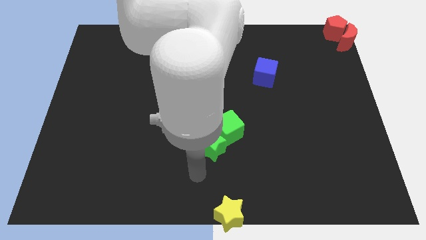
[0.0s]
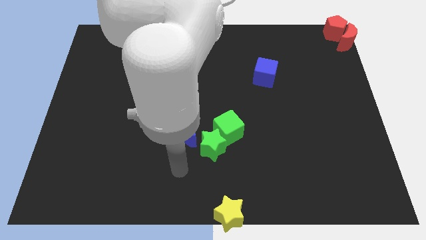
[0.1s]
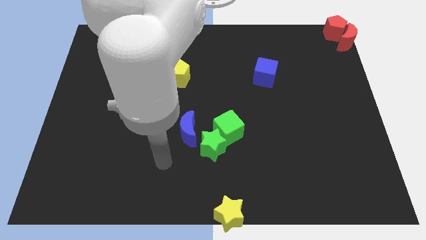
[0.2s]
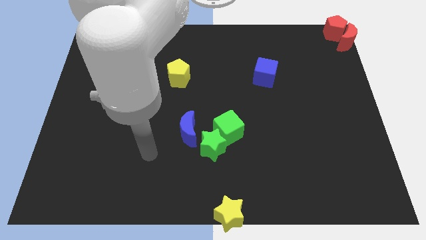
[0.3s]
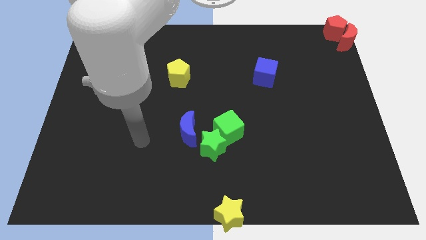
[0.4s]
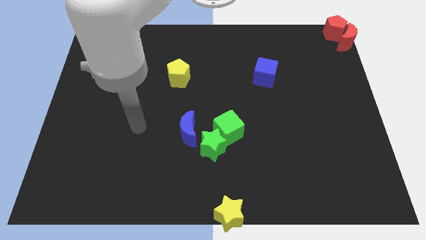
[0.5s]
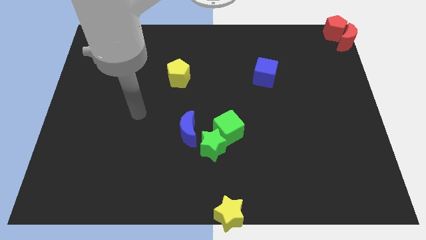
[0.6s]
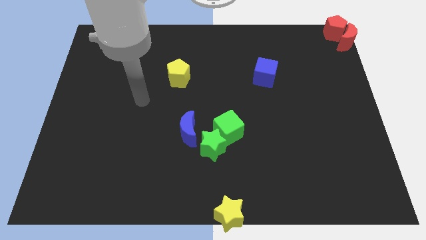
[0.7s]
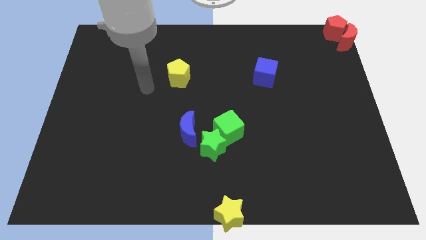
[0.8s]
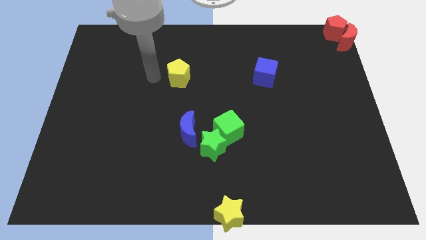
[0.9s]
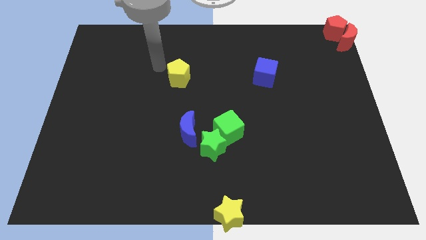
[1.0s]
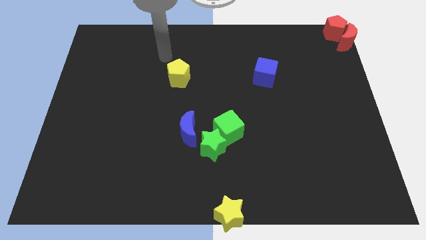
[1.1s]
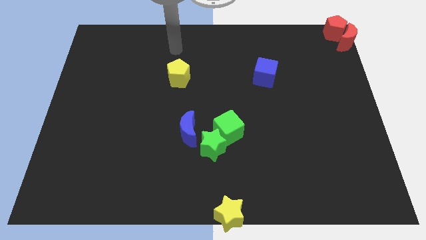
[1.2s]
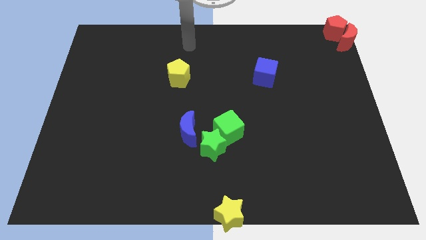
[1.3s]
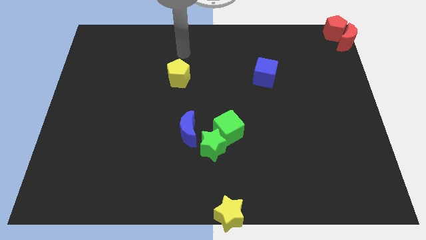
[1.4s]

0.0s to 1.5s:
point your arm at the top side of the yellow pentagon

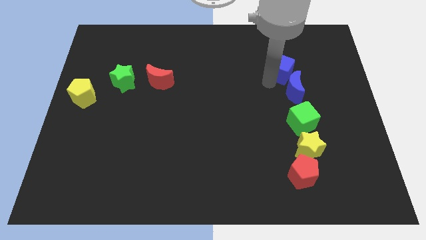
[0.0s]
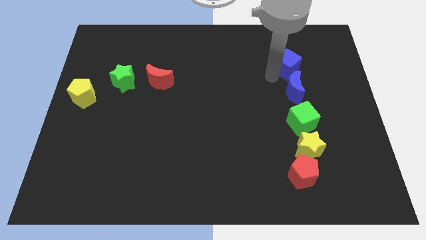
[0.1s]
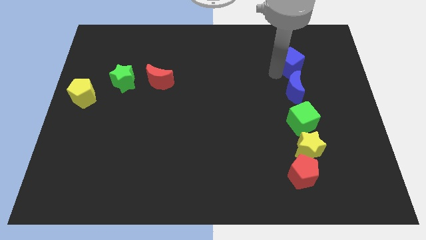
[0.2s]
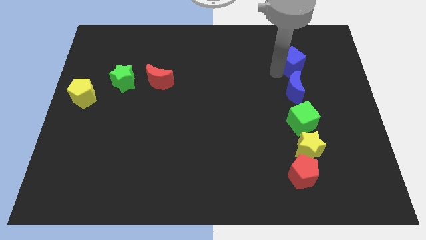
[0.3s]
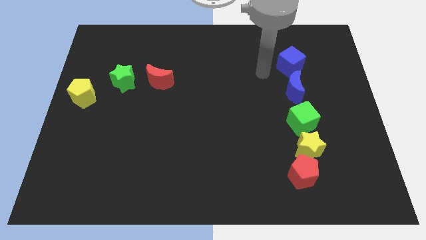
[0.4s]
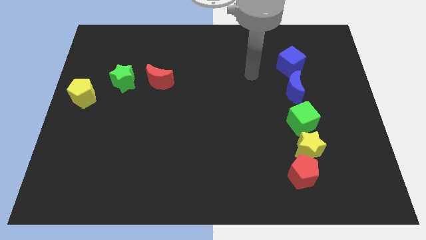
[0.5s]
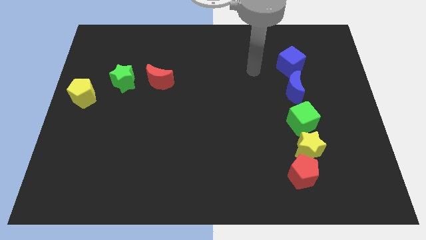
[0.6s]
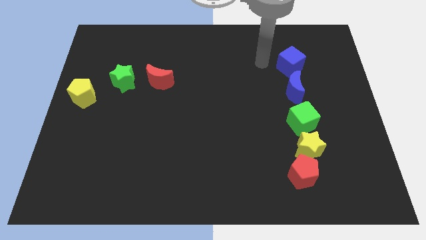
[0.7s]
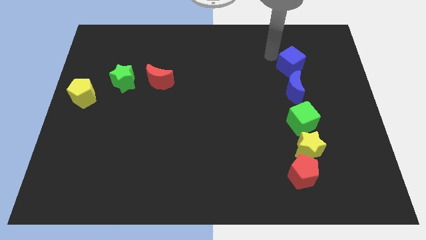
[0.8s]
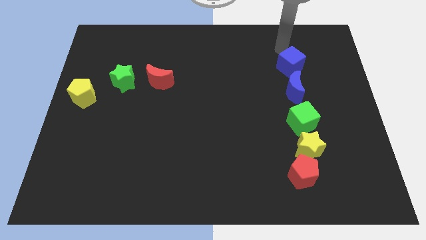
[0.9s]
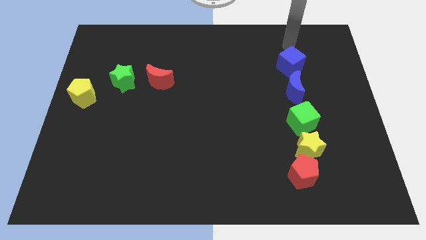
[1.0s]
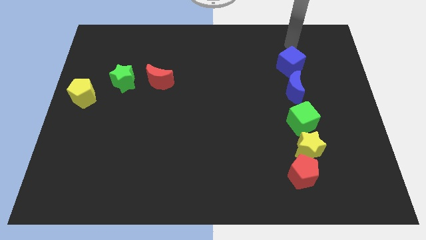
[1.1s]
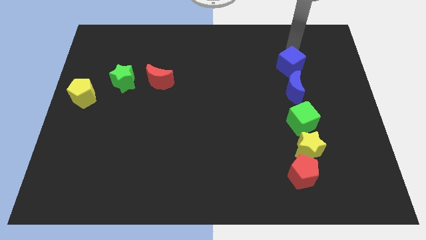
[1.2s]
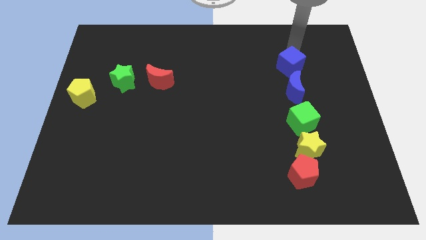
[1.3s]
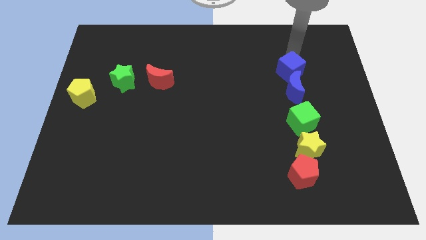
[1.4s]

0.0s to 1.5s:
put the blue cube above the blue moon

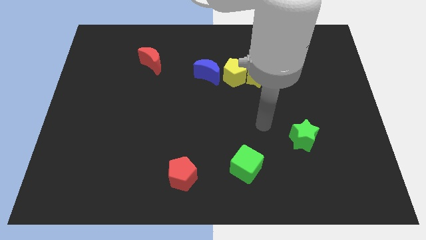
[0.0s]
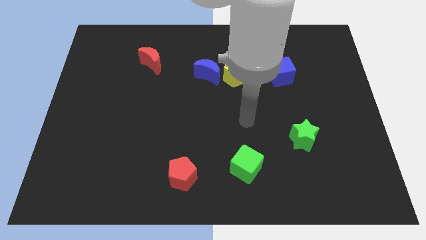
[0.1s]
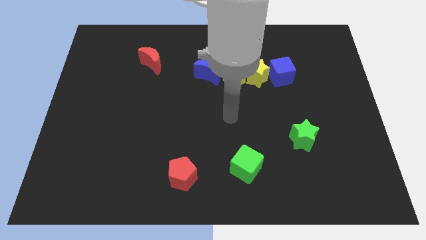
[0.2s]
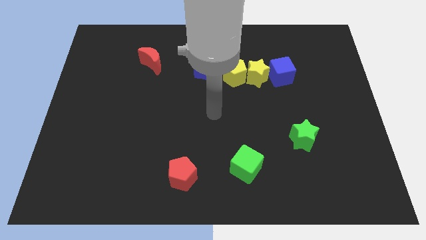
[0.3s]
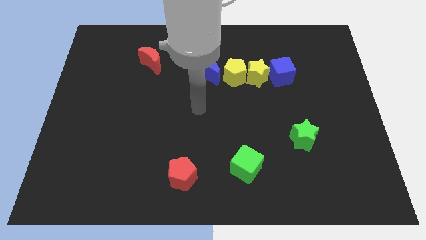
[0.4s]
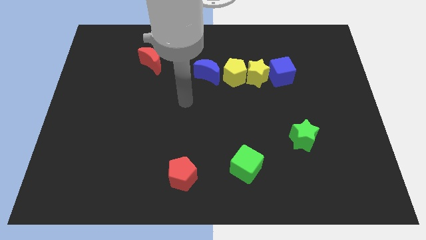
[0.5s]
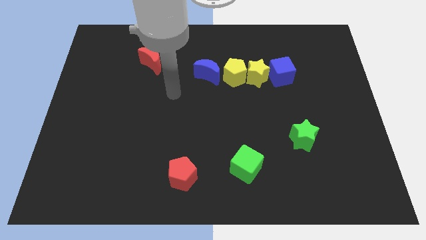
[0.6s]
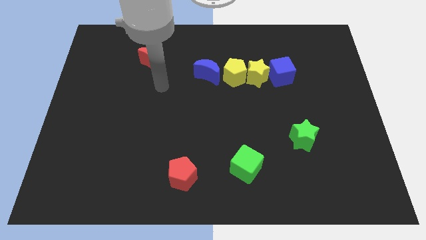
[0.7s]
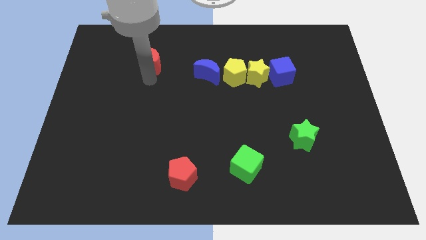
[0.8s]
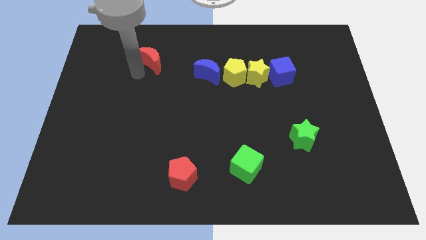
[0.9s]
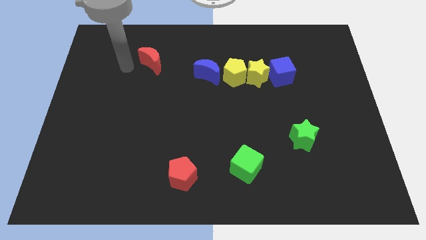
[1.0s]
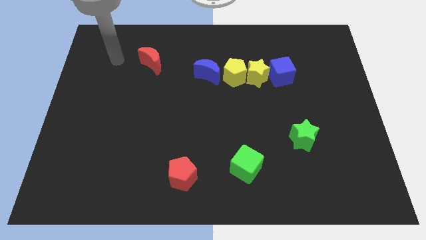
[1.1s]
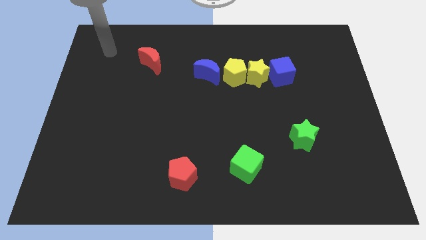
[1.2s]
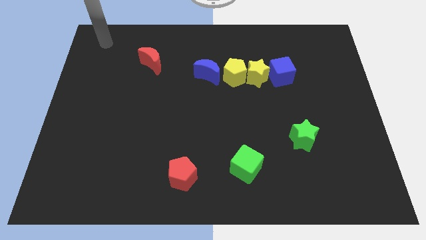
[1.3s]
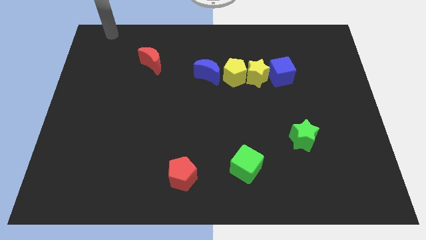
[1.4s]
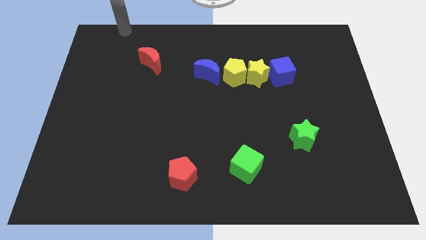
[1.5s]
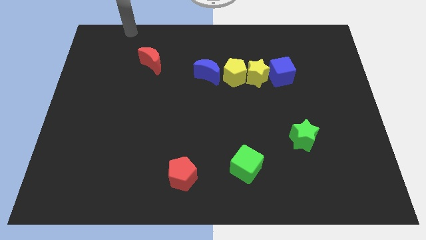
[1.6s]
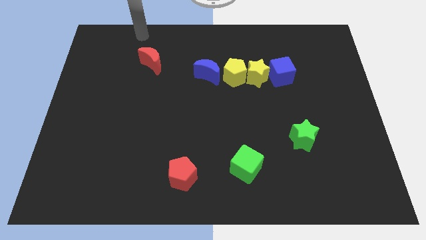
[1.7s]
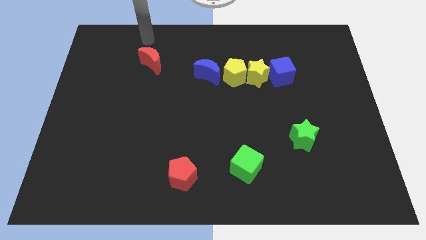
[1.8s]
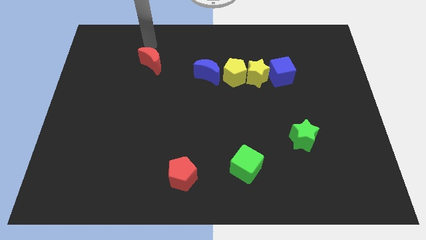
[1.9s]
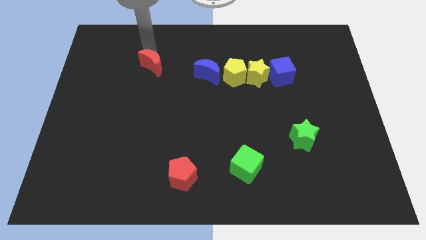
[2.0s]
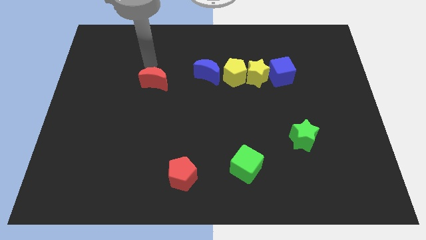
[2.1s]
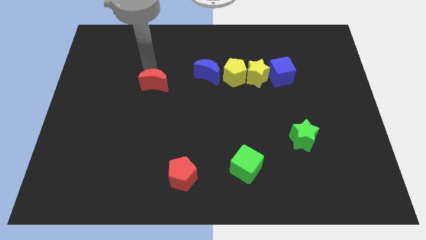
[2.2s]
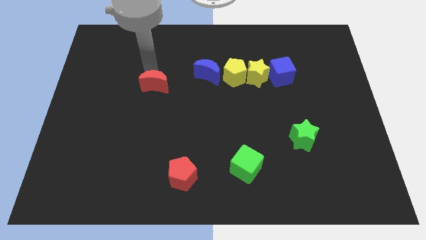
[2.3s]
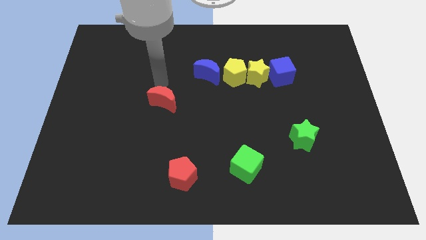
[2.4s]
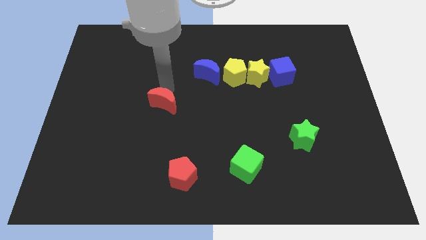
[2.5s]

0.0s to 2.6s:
push the red crescent downwards

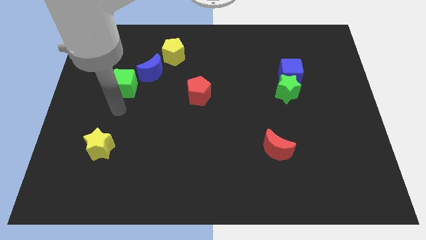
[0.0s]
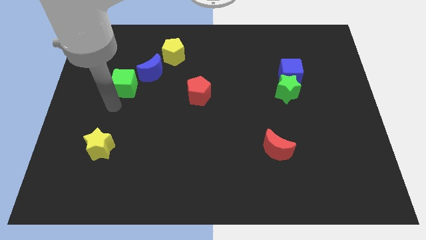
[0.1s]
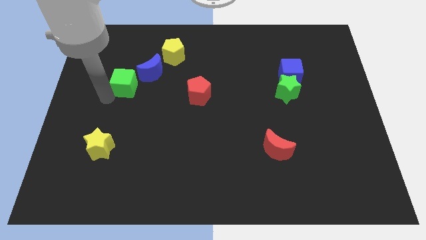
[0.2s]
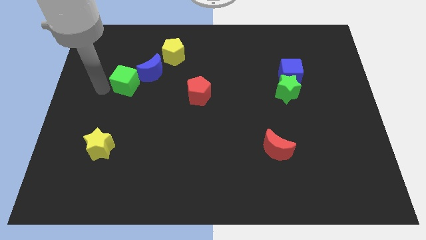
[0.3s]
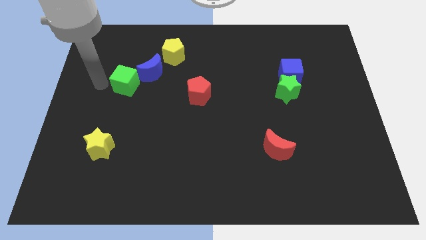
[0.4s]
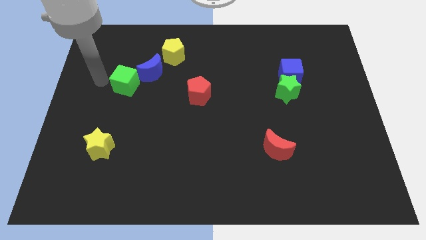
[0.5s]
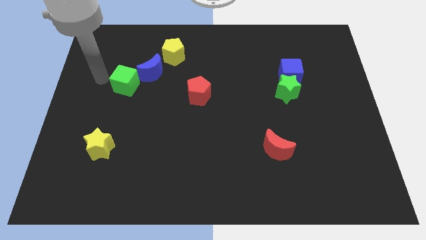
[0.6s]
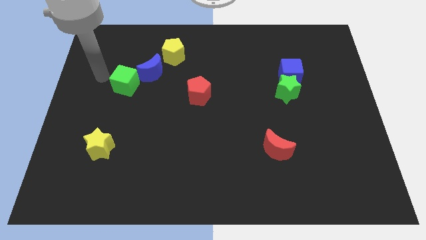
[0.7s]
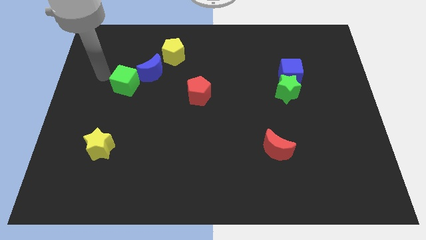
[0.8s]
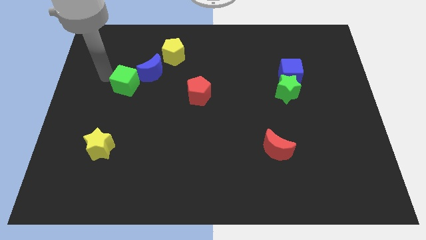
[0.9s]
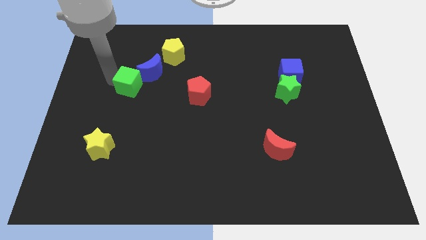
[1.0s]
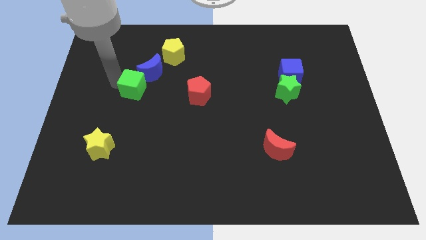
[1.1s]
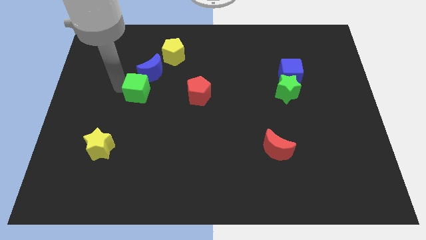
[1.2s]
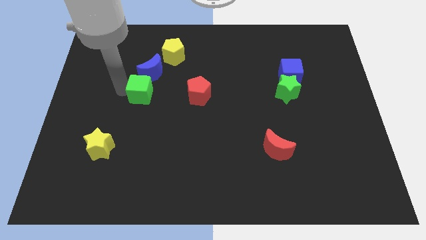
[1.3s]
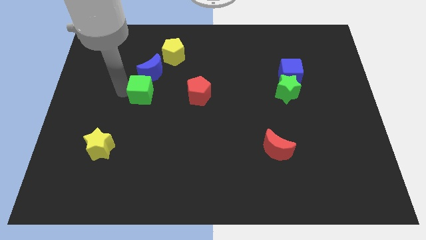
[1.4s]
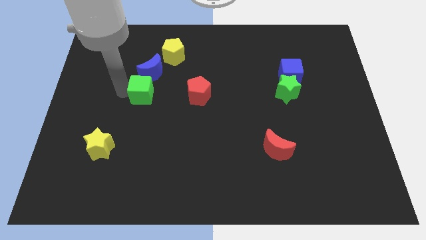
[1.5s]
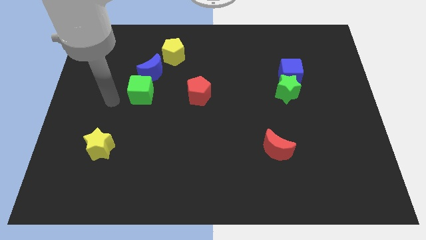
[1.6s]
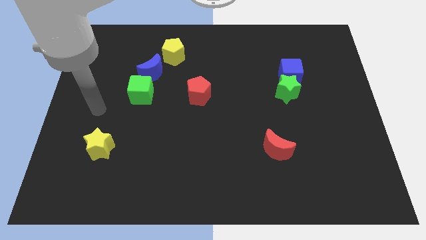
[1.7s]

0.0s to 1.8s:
move the green cube down to the blue moon

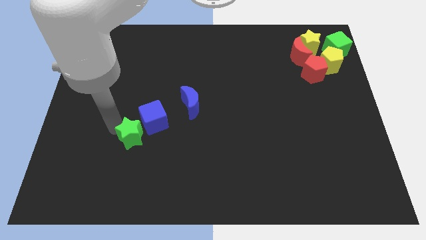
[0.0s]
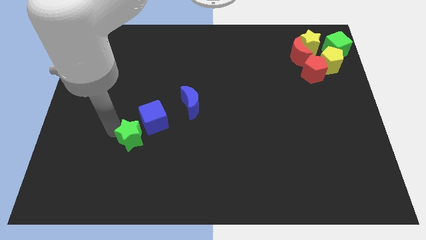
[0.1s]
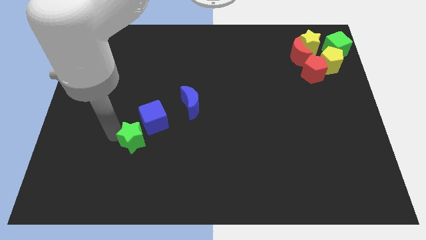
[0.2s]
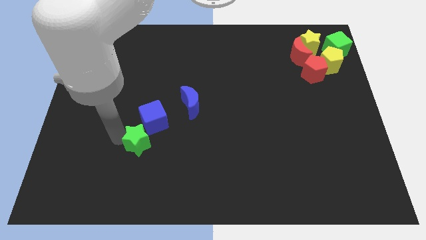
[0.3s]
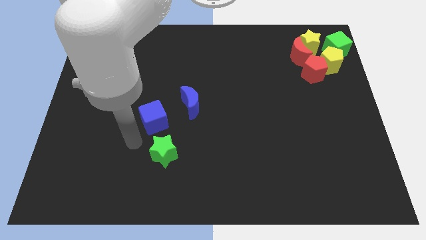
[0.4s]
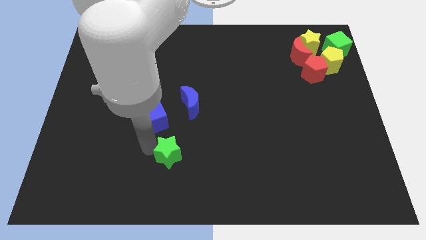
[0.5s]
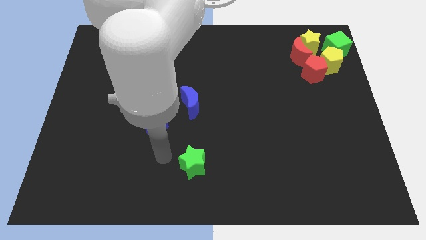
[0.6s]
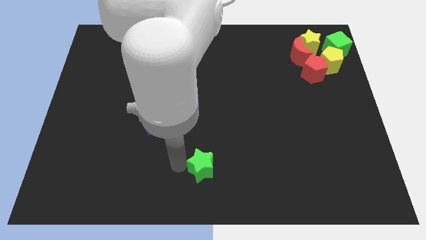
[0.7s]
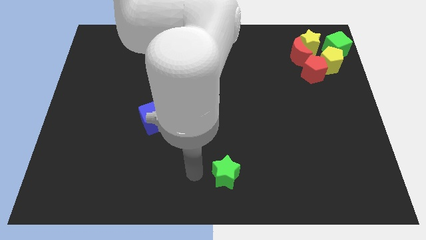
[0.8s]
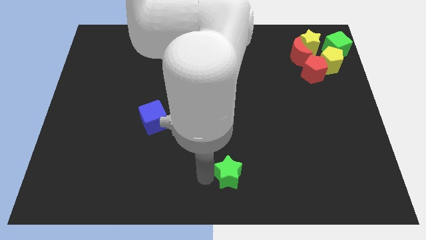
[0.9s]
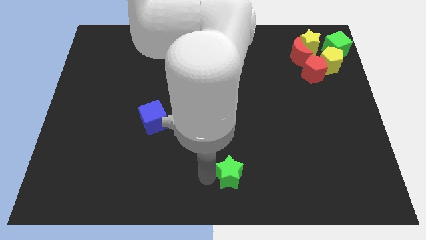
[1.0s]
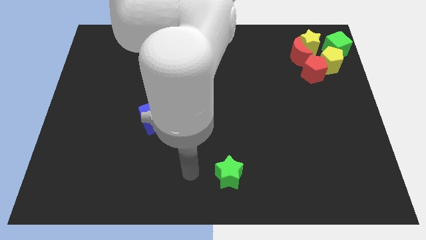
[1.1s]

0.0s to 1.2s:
move green star away from the blue cube

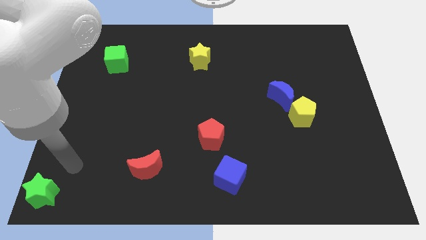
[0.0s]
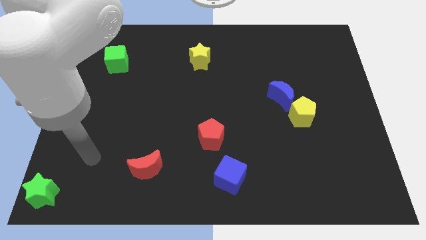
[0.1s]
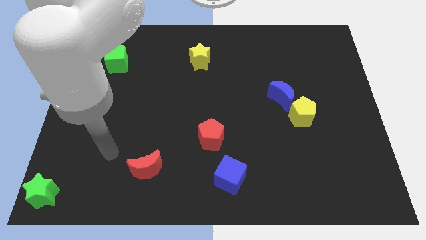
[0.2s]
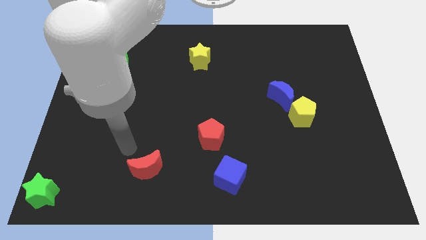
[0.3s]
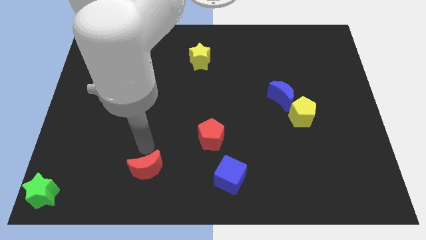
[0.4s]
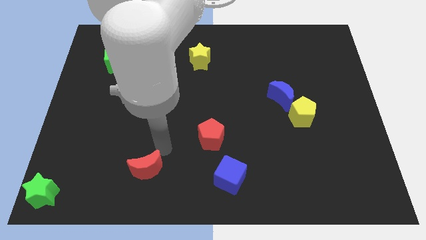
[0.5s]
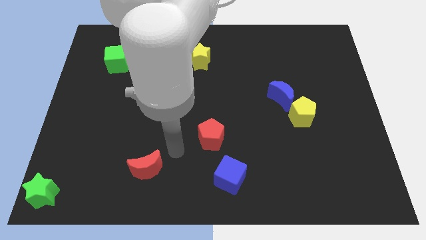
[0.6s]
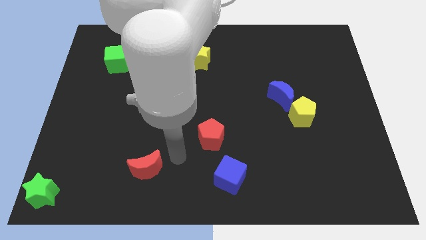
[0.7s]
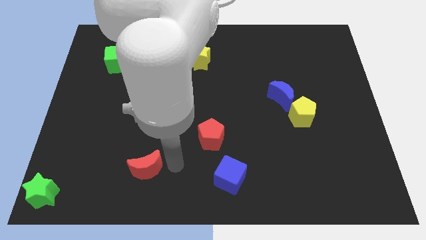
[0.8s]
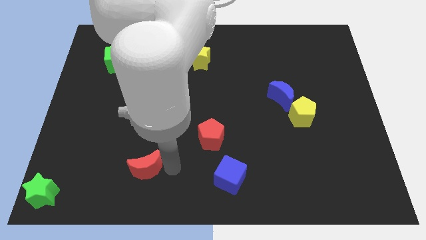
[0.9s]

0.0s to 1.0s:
place your arm to the right of red moon
